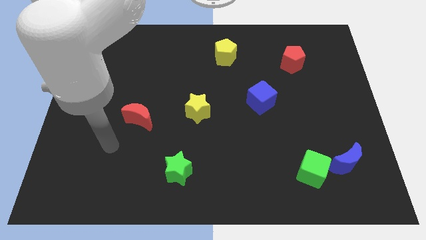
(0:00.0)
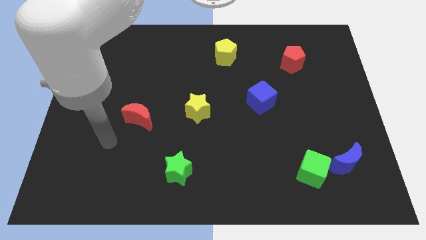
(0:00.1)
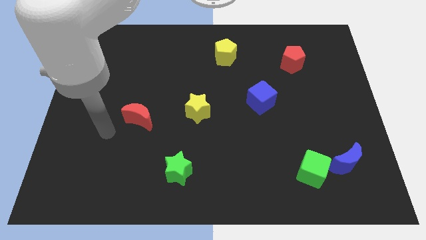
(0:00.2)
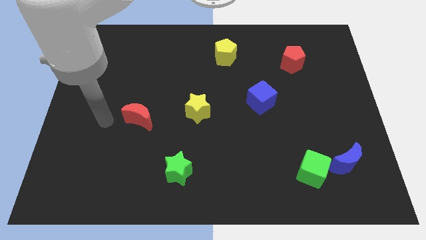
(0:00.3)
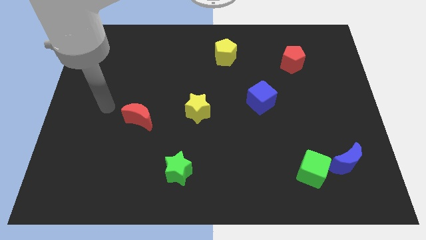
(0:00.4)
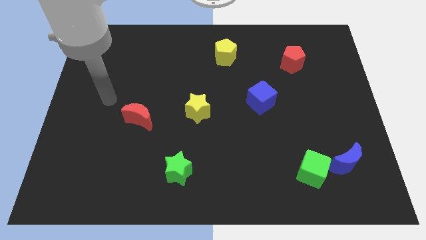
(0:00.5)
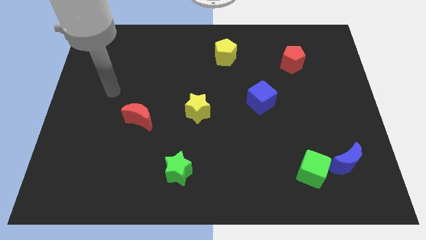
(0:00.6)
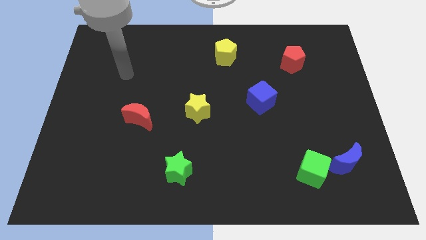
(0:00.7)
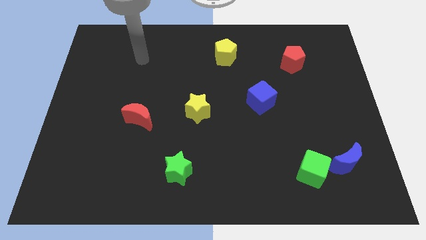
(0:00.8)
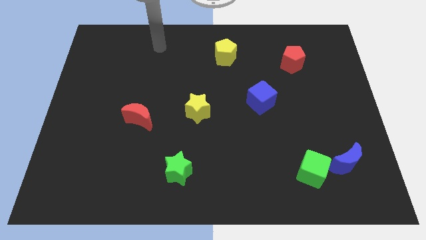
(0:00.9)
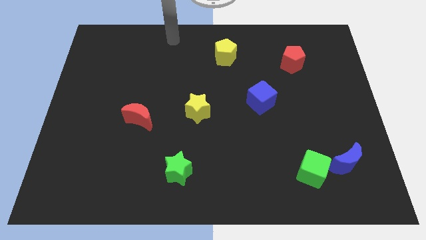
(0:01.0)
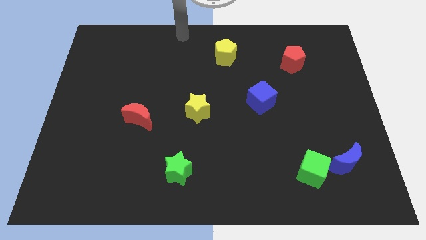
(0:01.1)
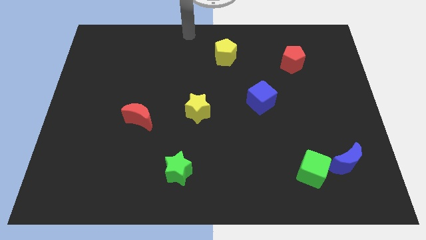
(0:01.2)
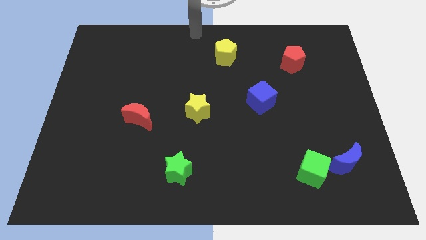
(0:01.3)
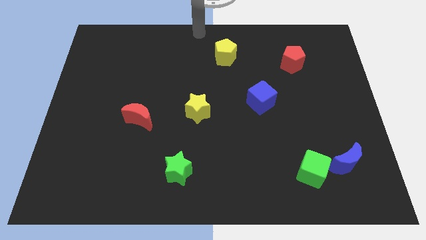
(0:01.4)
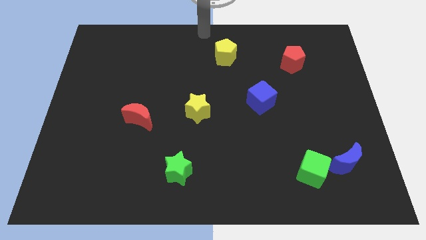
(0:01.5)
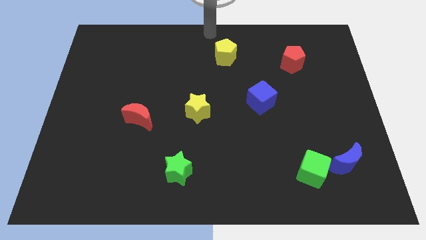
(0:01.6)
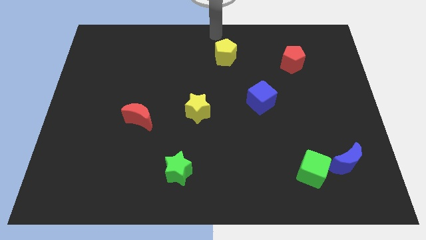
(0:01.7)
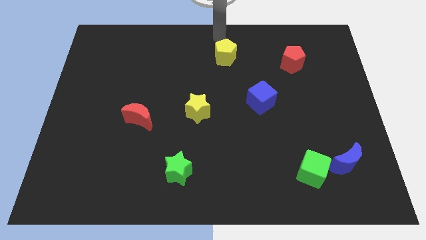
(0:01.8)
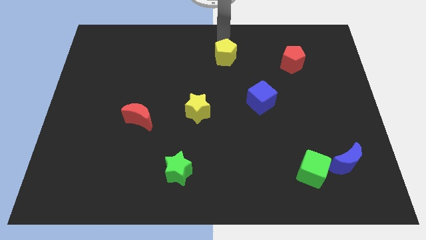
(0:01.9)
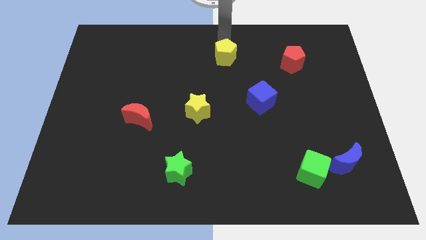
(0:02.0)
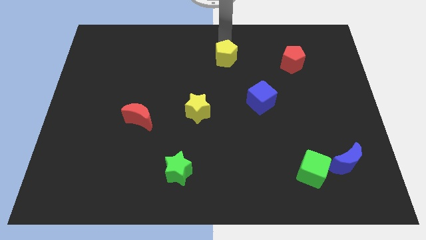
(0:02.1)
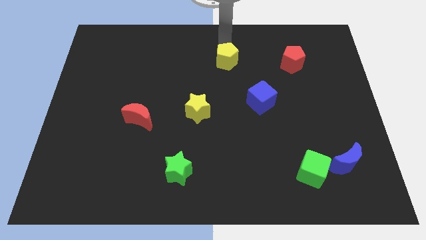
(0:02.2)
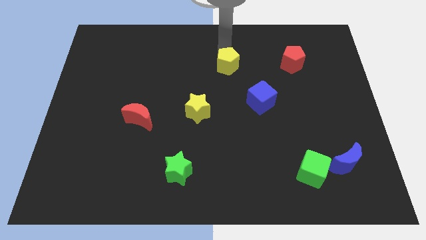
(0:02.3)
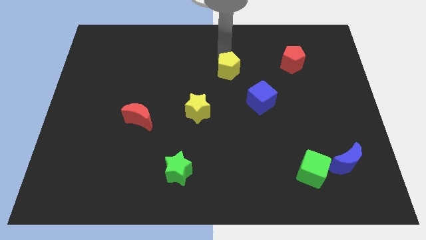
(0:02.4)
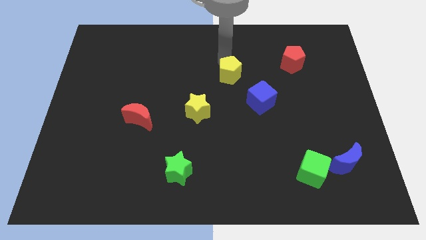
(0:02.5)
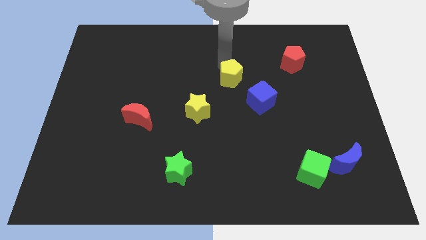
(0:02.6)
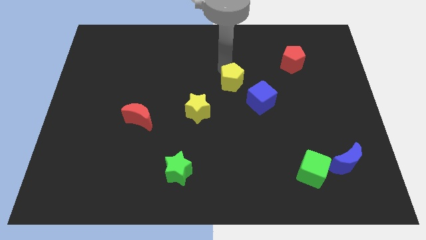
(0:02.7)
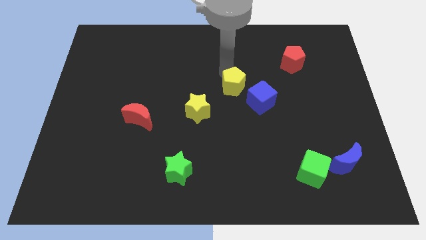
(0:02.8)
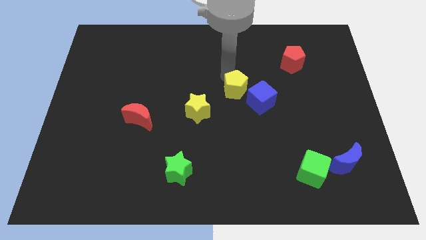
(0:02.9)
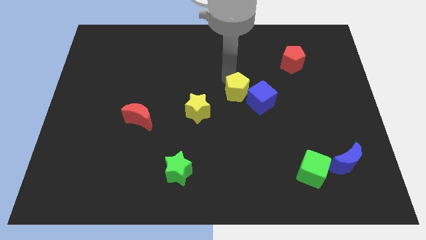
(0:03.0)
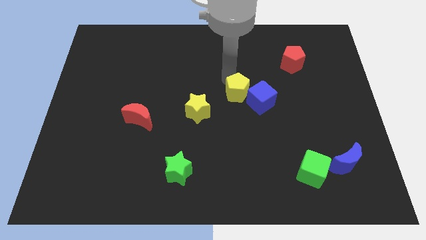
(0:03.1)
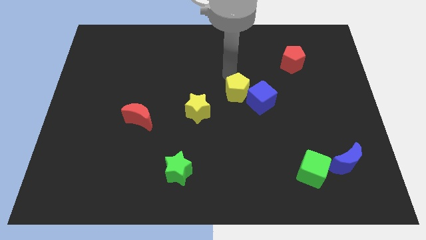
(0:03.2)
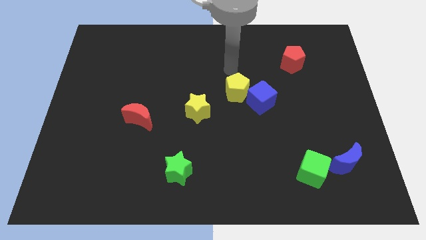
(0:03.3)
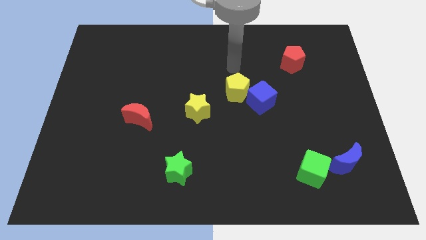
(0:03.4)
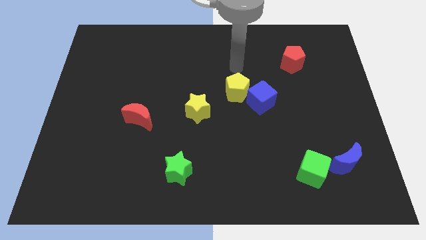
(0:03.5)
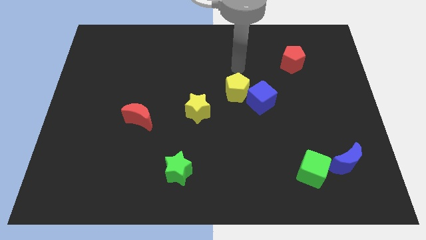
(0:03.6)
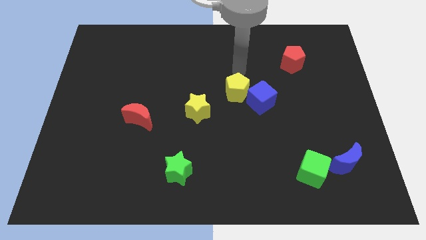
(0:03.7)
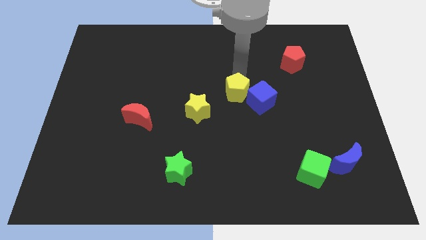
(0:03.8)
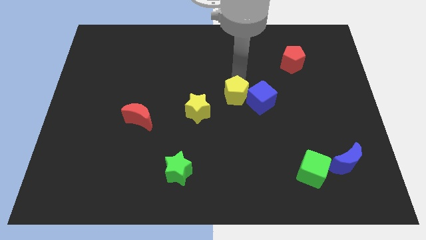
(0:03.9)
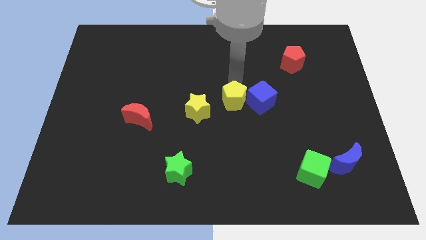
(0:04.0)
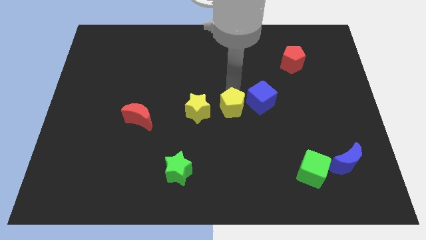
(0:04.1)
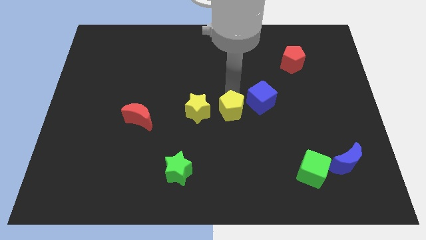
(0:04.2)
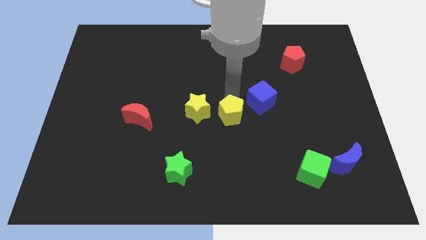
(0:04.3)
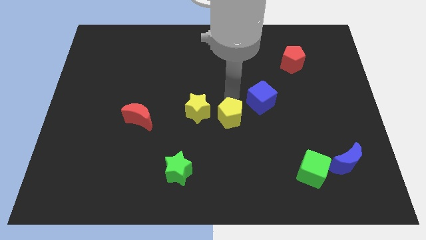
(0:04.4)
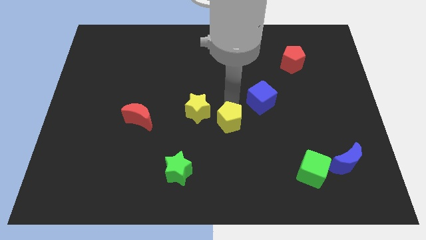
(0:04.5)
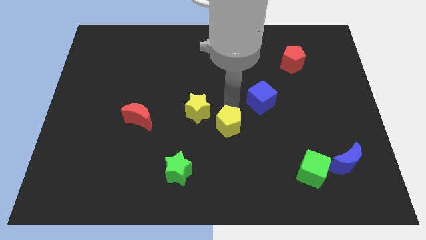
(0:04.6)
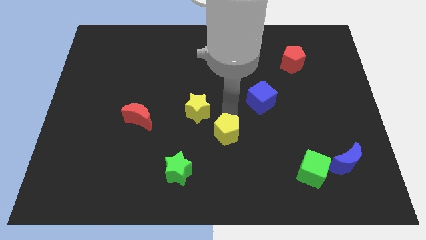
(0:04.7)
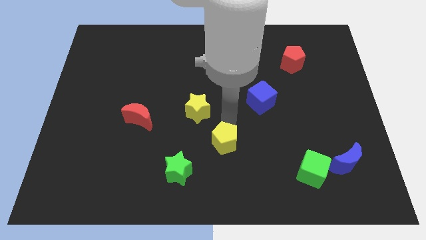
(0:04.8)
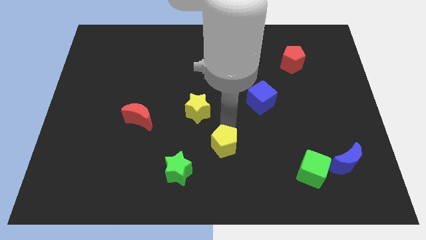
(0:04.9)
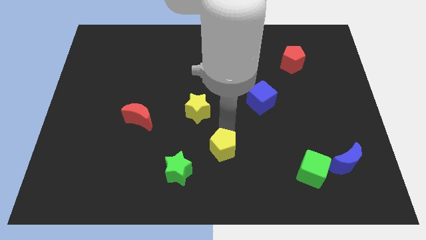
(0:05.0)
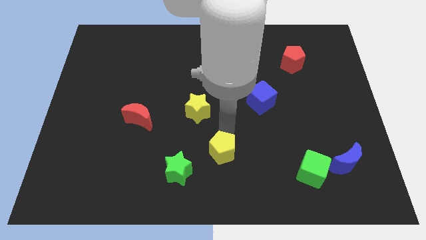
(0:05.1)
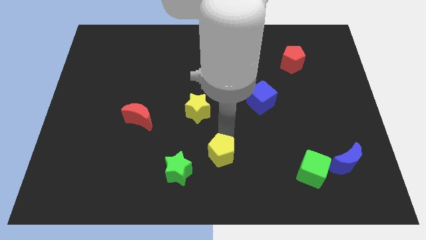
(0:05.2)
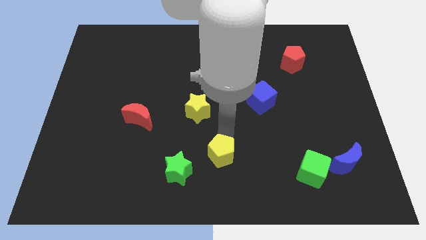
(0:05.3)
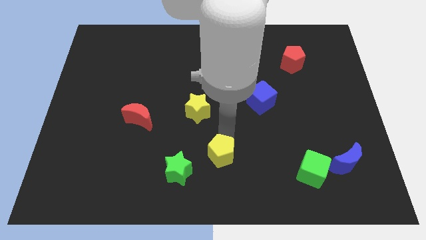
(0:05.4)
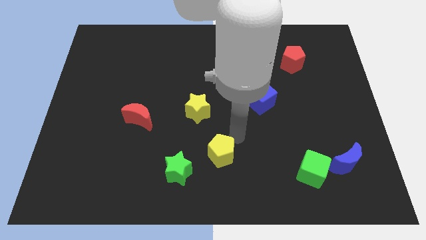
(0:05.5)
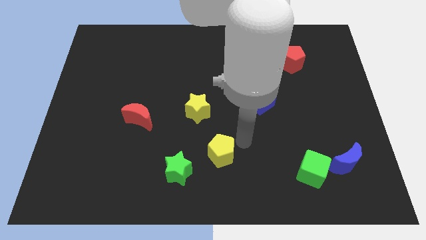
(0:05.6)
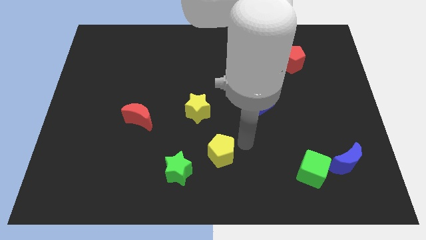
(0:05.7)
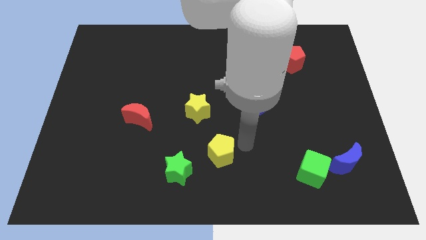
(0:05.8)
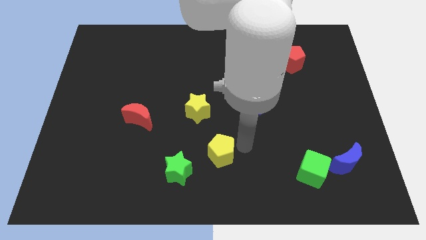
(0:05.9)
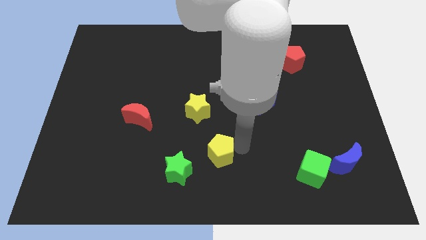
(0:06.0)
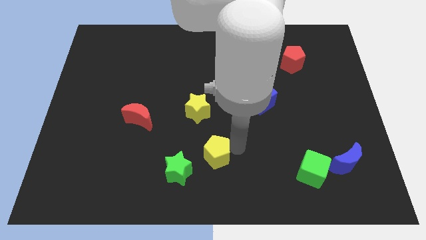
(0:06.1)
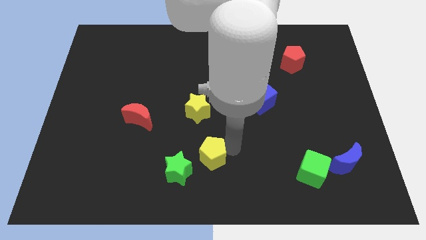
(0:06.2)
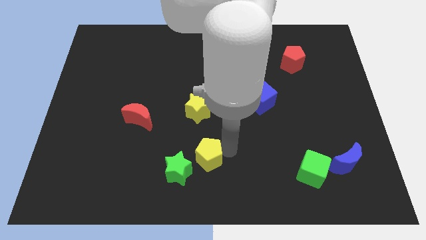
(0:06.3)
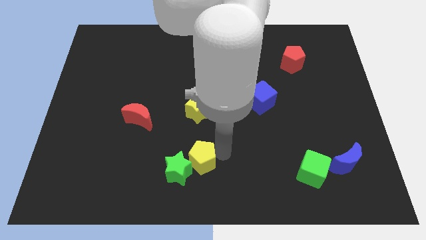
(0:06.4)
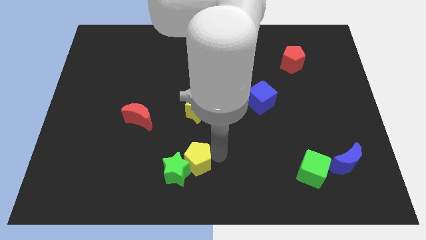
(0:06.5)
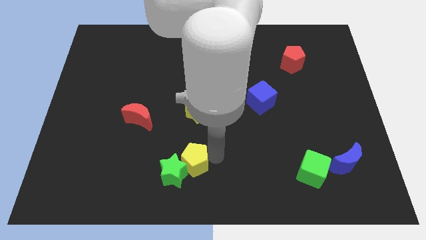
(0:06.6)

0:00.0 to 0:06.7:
push the yellow pentagon towards the green star

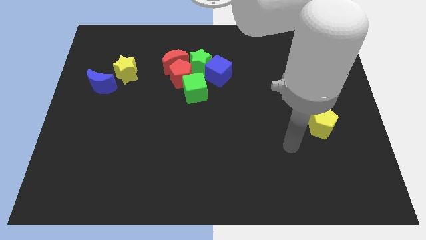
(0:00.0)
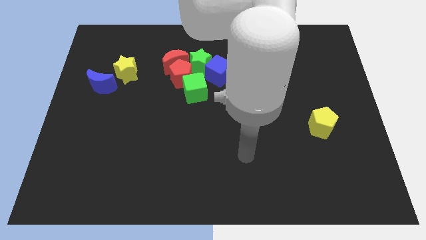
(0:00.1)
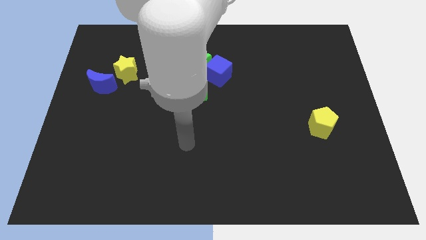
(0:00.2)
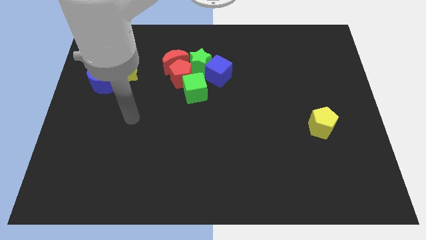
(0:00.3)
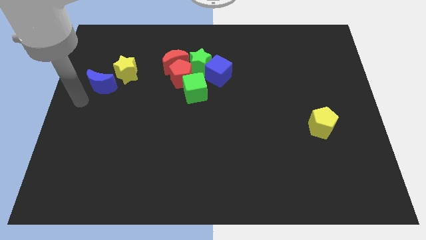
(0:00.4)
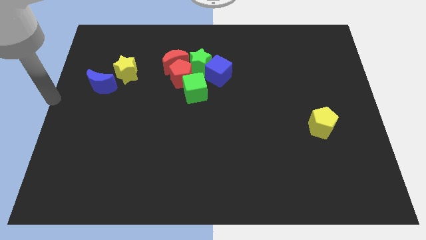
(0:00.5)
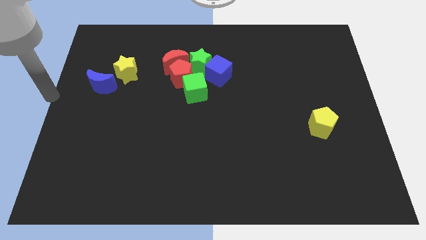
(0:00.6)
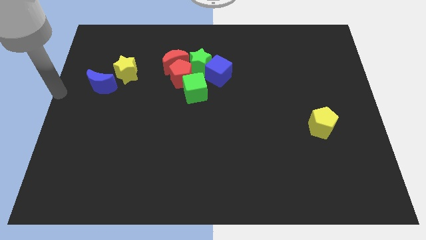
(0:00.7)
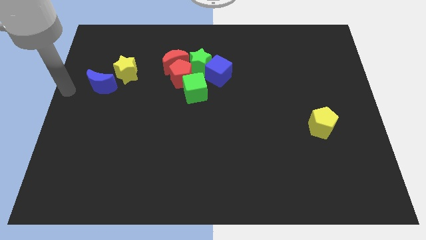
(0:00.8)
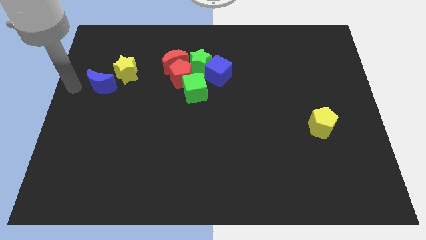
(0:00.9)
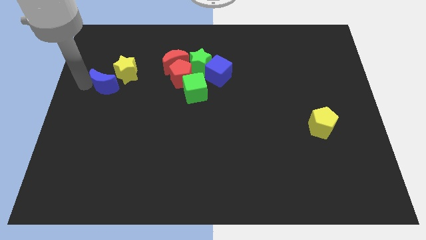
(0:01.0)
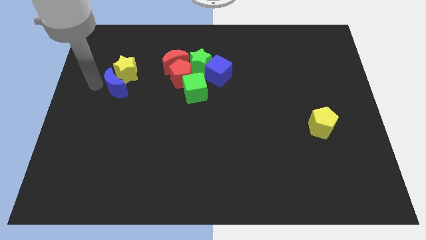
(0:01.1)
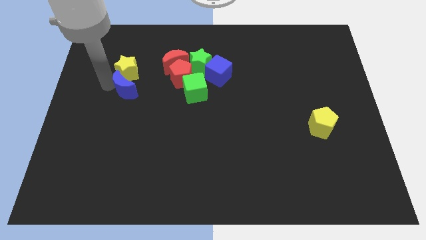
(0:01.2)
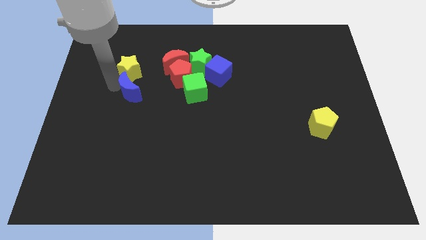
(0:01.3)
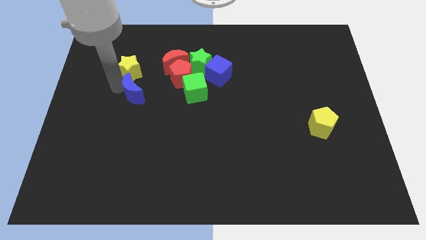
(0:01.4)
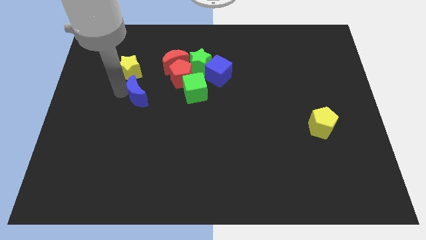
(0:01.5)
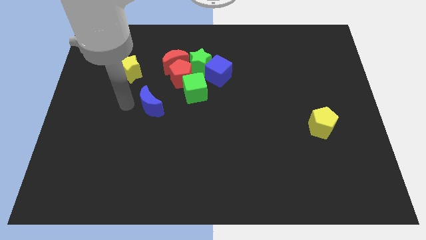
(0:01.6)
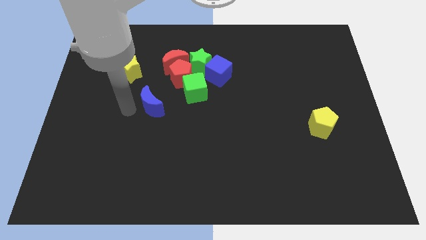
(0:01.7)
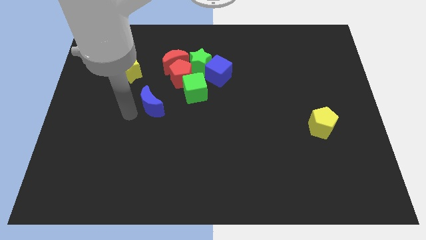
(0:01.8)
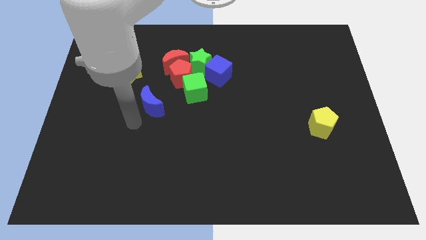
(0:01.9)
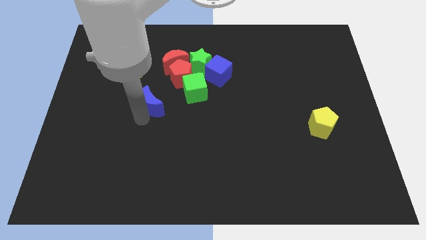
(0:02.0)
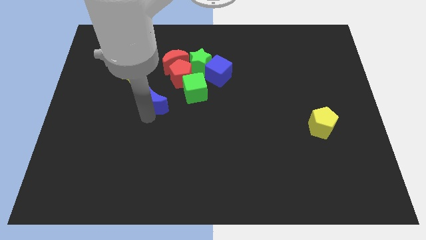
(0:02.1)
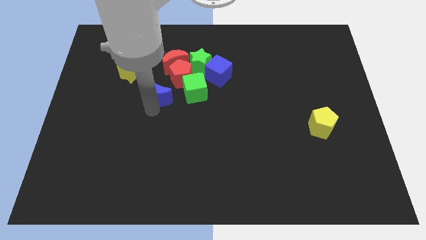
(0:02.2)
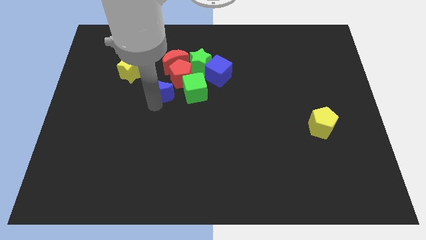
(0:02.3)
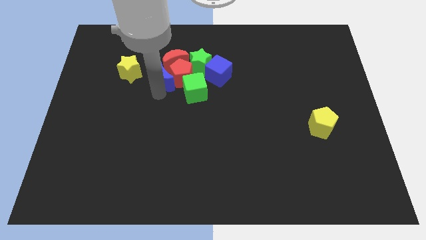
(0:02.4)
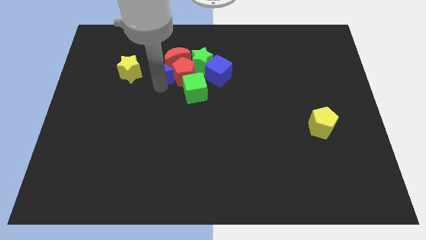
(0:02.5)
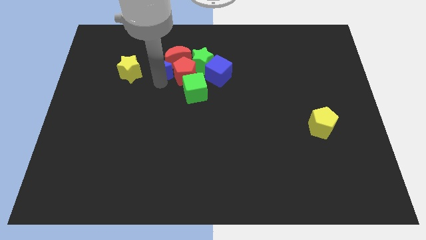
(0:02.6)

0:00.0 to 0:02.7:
move the blue moon next to the red moon
